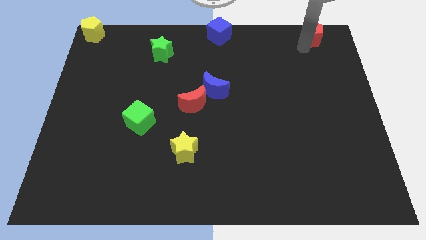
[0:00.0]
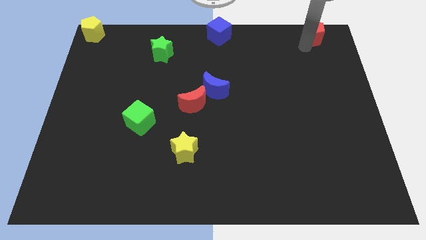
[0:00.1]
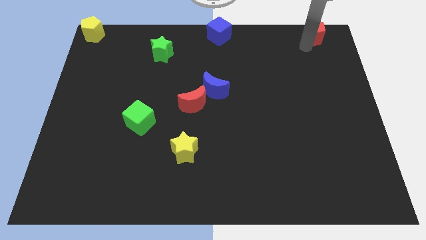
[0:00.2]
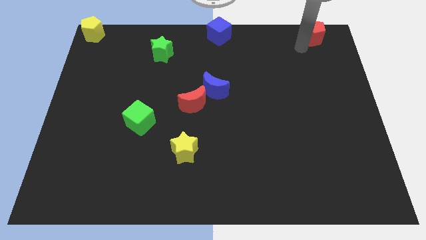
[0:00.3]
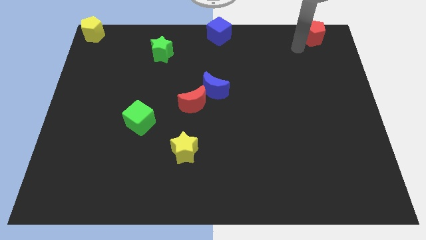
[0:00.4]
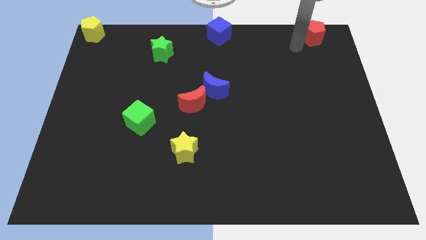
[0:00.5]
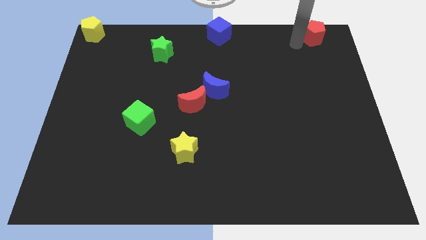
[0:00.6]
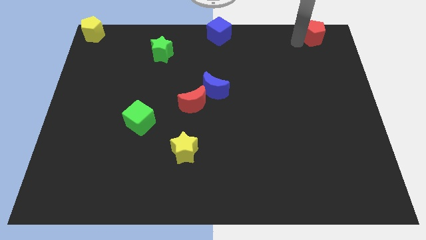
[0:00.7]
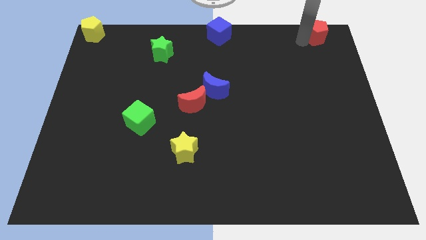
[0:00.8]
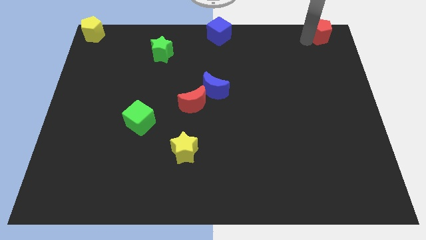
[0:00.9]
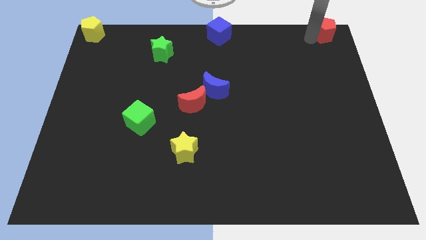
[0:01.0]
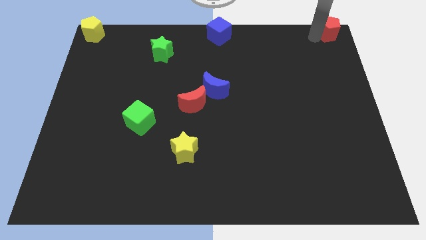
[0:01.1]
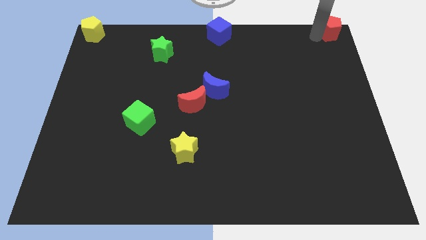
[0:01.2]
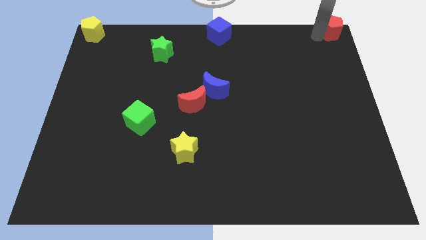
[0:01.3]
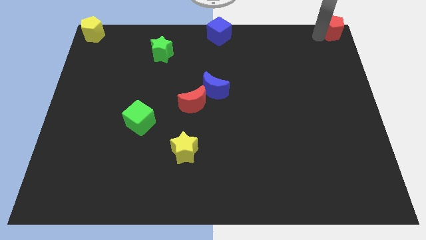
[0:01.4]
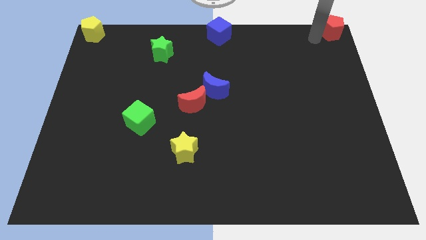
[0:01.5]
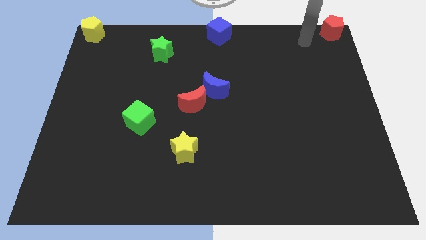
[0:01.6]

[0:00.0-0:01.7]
place the red pentagon to the right top corner

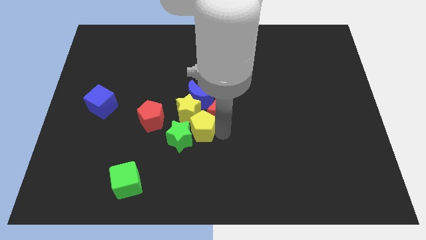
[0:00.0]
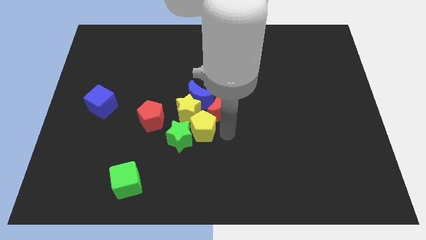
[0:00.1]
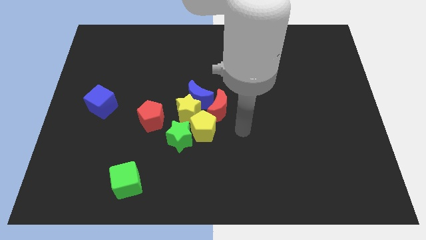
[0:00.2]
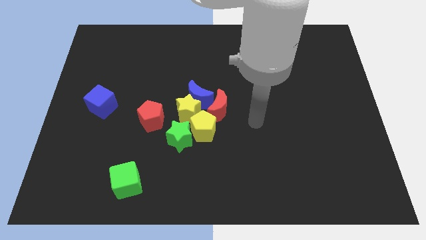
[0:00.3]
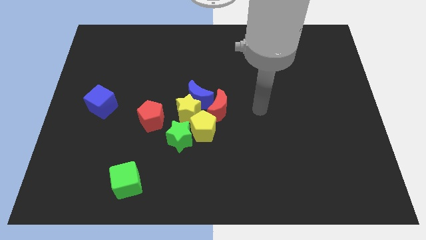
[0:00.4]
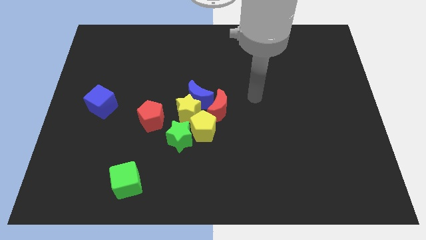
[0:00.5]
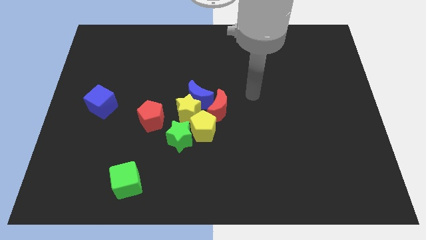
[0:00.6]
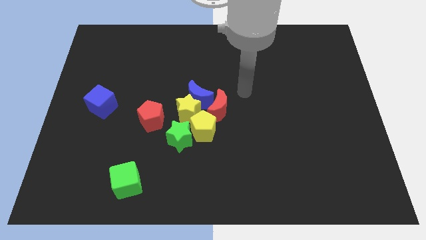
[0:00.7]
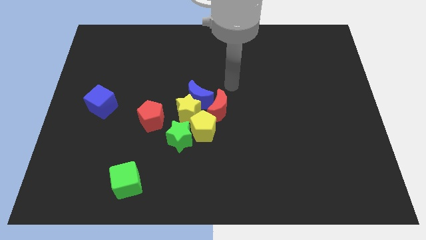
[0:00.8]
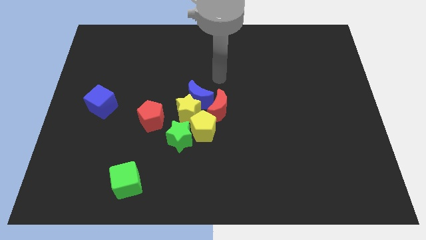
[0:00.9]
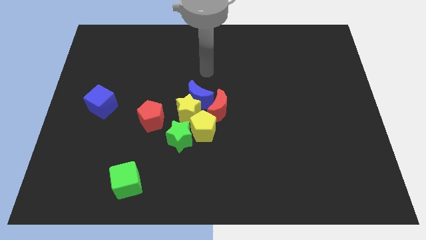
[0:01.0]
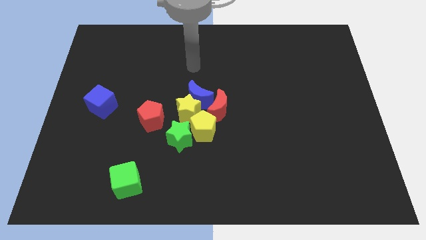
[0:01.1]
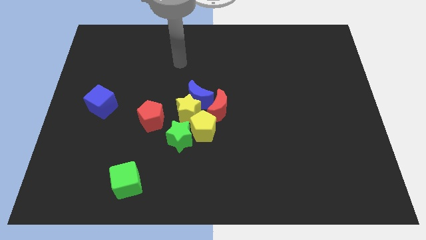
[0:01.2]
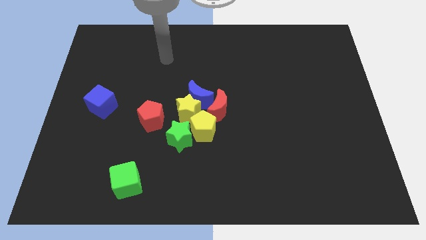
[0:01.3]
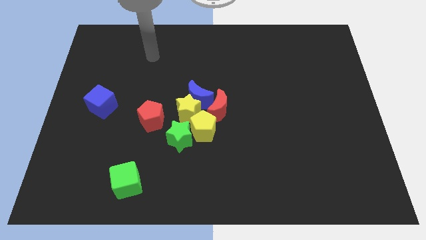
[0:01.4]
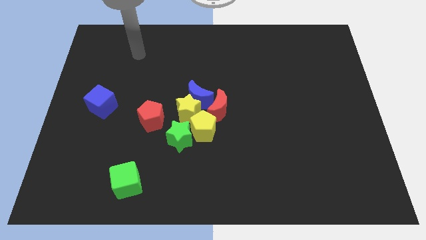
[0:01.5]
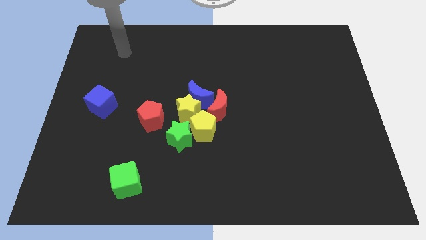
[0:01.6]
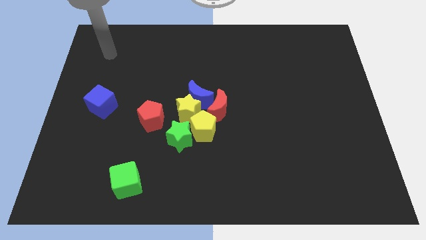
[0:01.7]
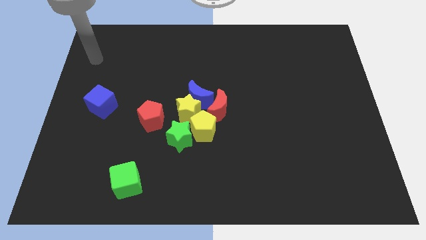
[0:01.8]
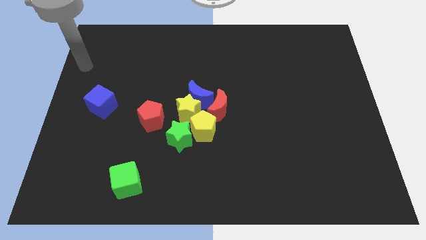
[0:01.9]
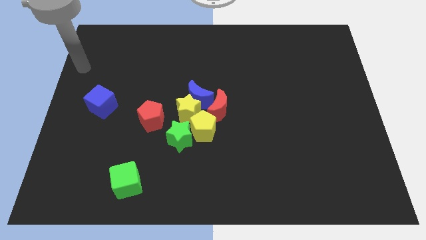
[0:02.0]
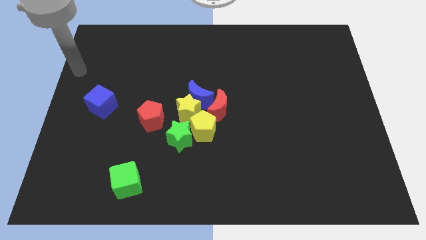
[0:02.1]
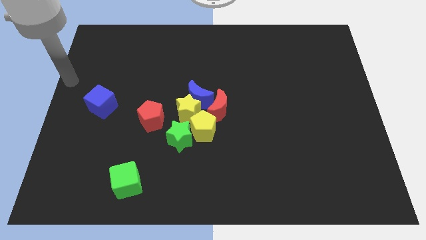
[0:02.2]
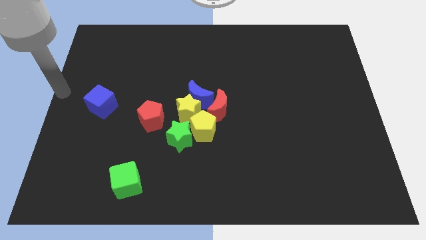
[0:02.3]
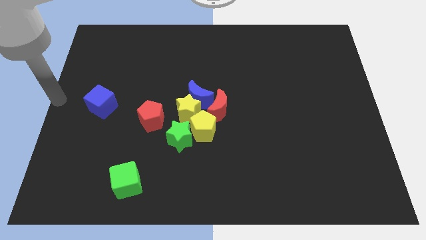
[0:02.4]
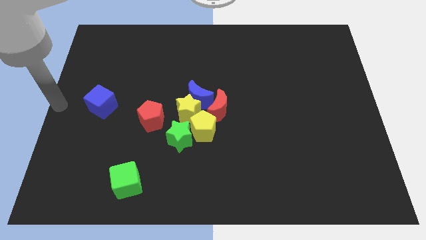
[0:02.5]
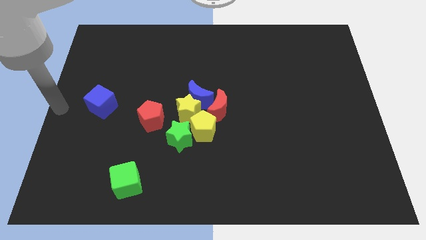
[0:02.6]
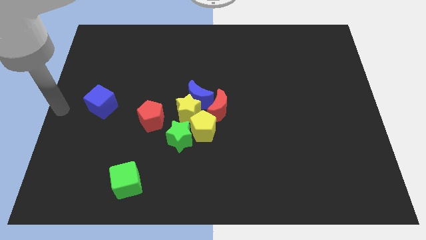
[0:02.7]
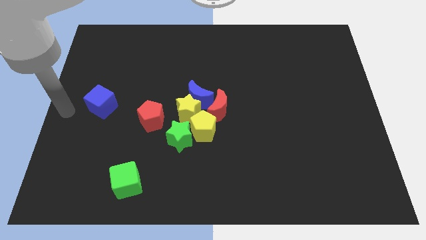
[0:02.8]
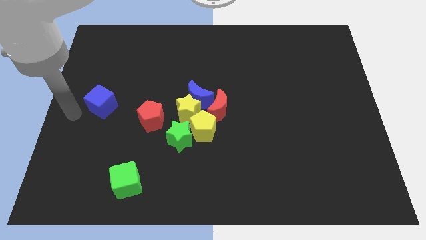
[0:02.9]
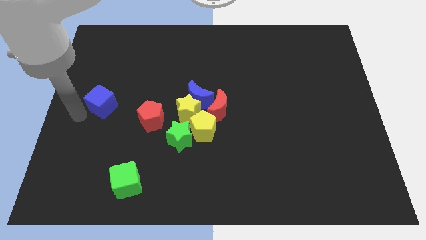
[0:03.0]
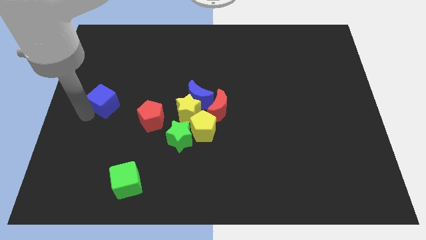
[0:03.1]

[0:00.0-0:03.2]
point your arm at the left of the blue cube

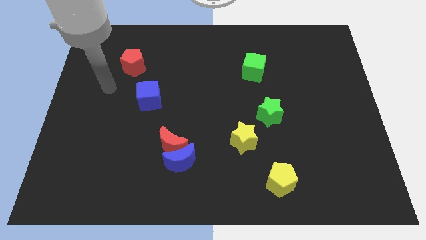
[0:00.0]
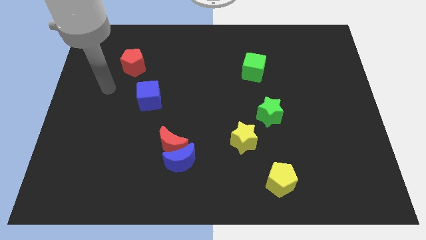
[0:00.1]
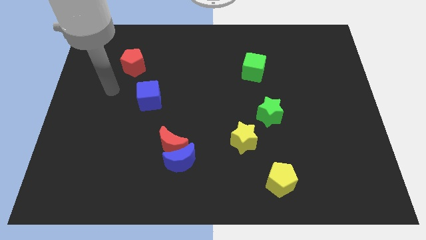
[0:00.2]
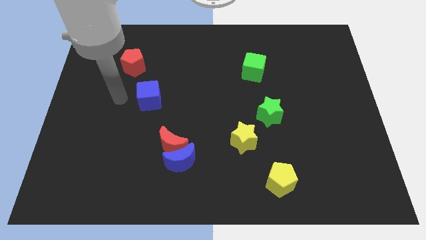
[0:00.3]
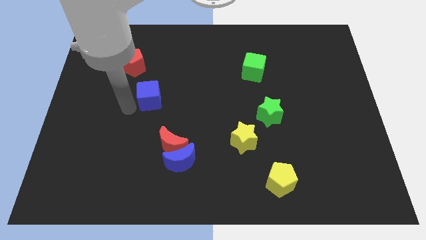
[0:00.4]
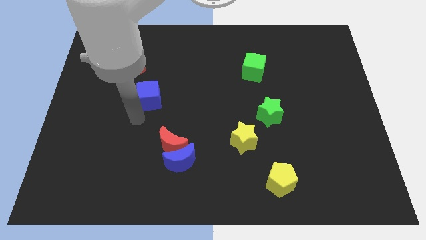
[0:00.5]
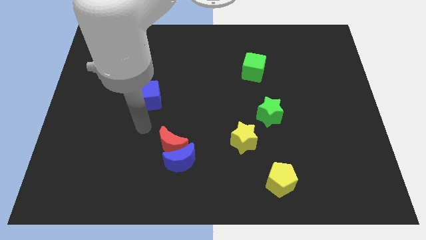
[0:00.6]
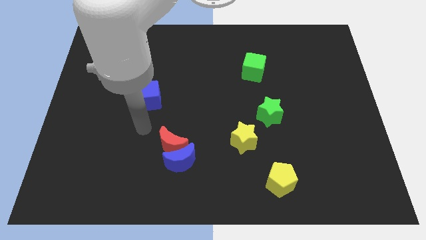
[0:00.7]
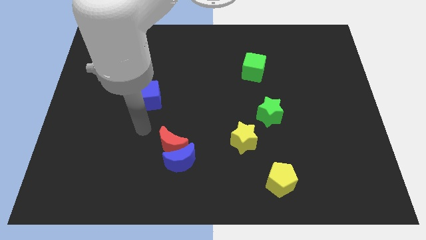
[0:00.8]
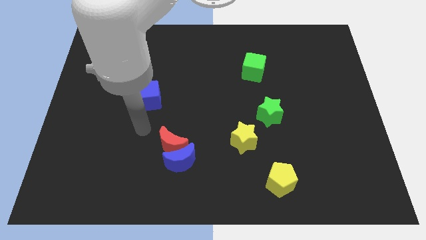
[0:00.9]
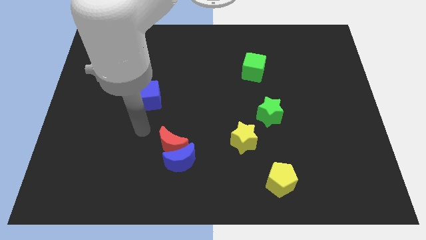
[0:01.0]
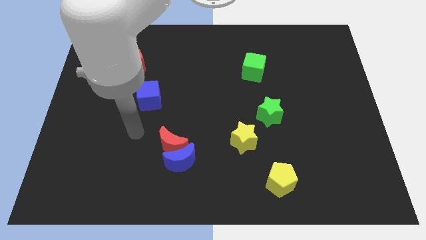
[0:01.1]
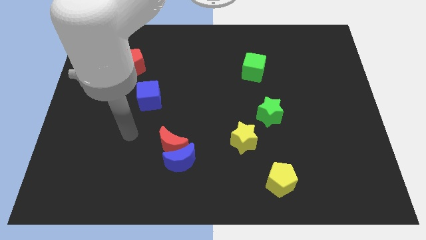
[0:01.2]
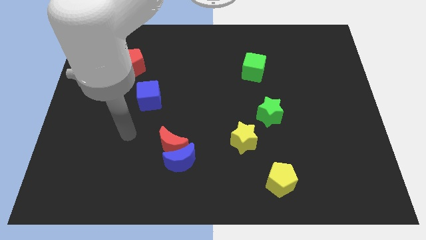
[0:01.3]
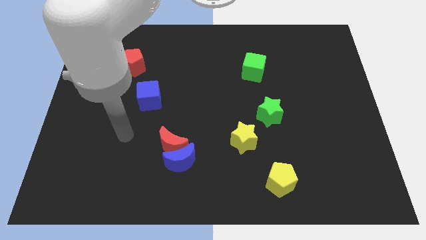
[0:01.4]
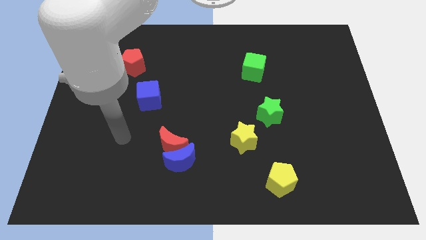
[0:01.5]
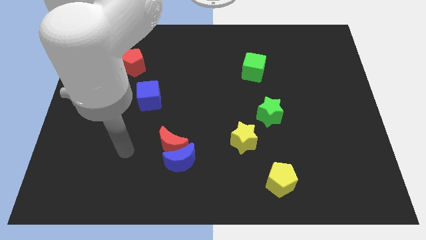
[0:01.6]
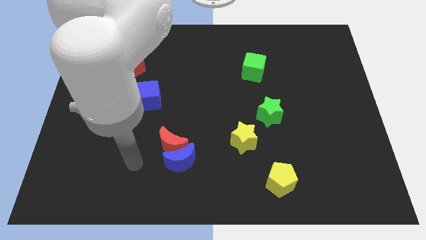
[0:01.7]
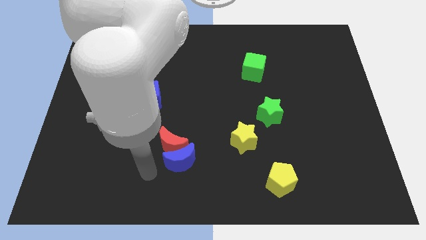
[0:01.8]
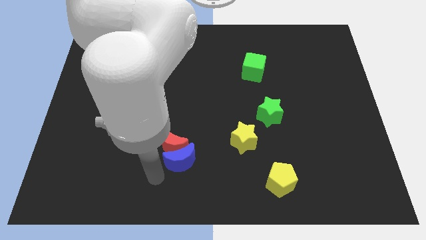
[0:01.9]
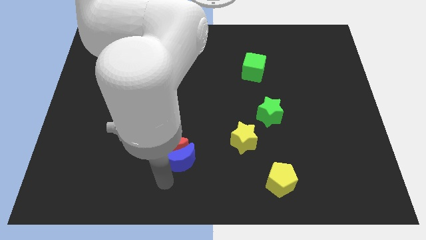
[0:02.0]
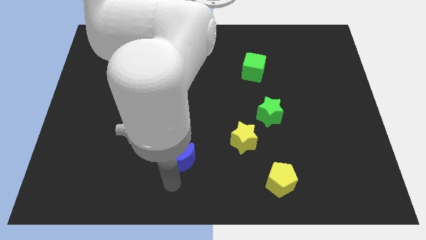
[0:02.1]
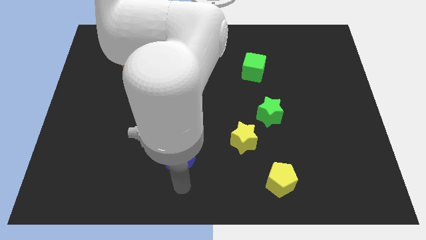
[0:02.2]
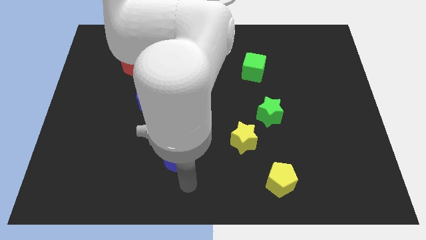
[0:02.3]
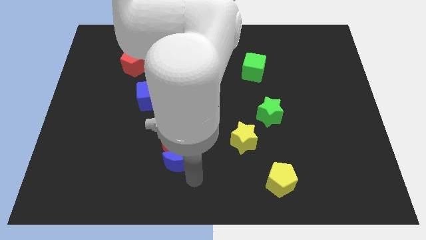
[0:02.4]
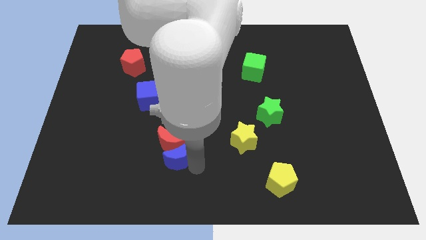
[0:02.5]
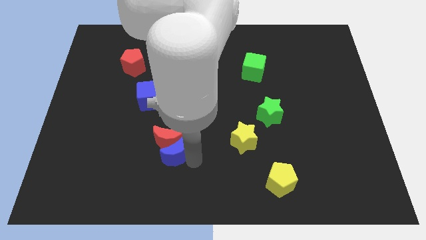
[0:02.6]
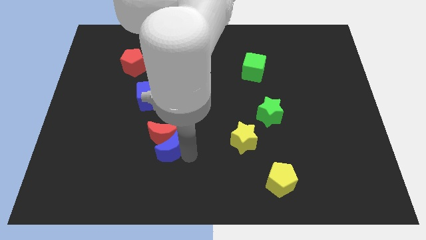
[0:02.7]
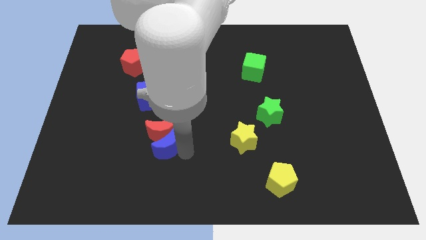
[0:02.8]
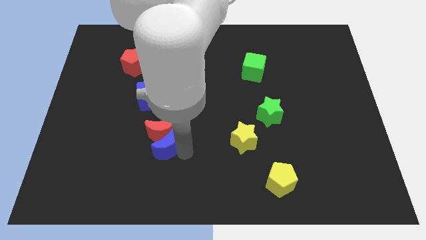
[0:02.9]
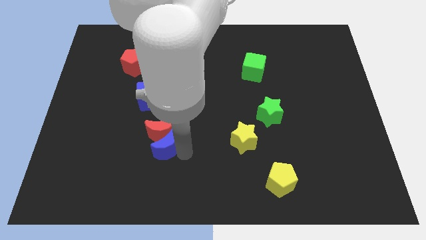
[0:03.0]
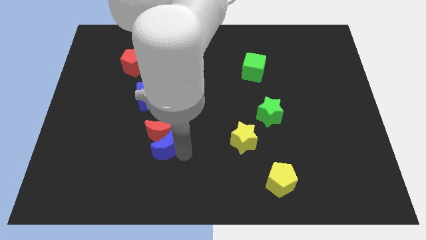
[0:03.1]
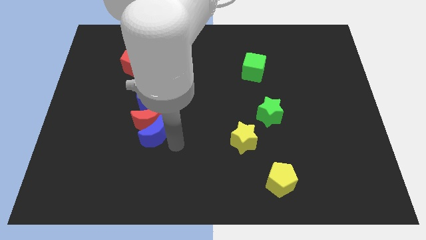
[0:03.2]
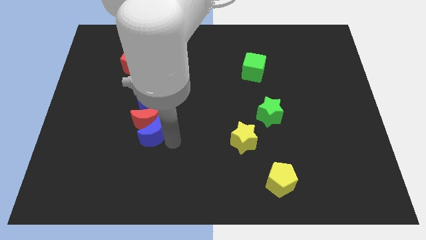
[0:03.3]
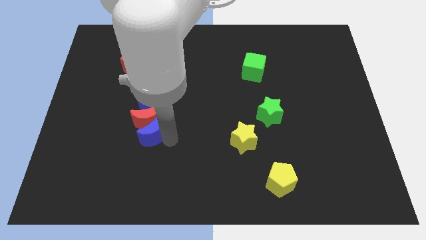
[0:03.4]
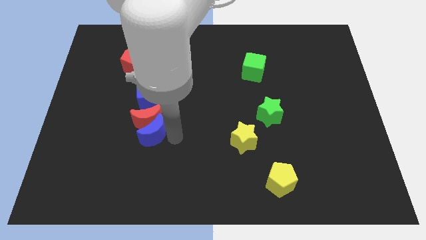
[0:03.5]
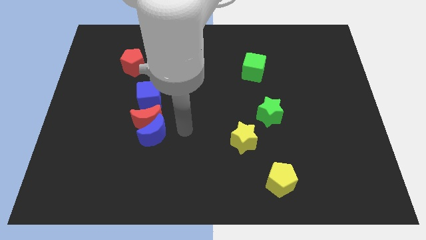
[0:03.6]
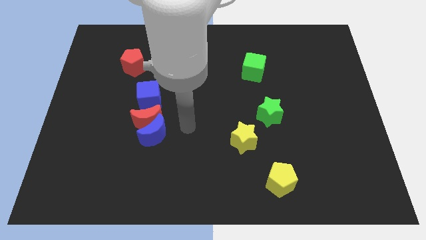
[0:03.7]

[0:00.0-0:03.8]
place the red and blue crescents below the blue cube

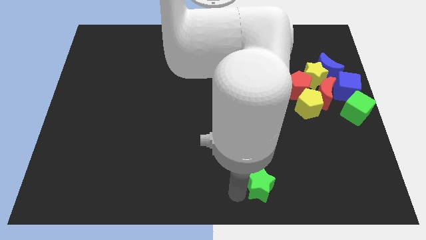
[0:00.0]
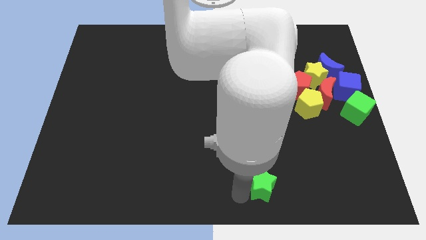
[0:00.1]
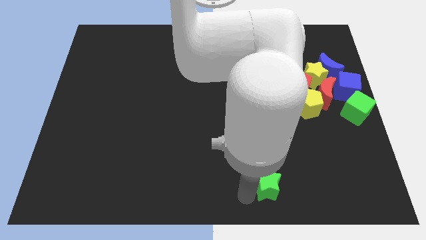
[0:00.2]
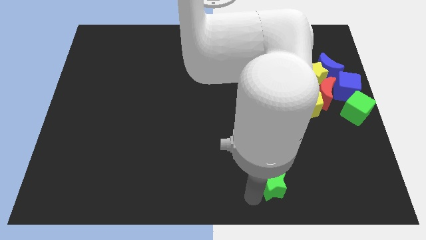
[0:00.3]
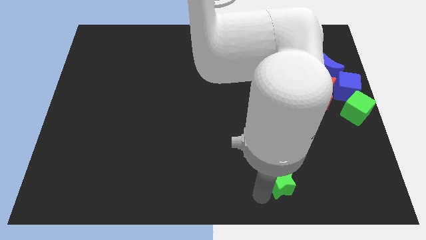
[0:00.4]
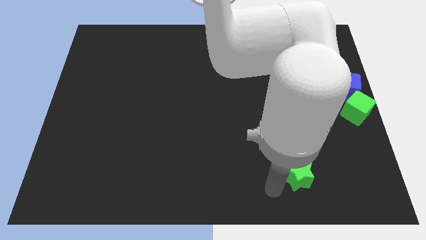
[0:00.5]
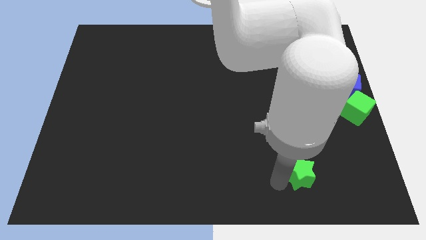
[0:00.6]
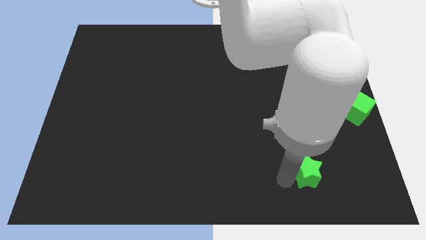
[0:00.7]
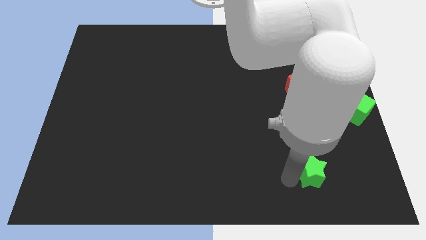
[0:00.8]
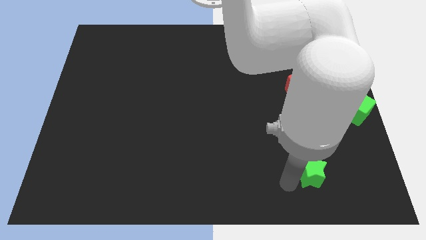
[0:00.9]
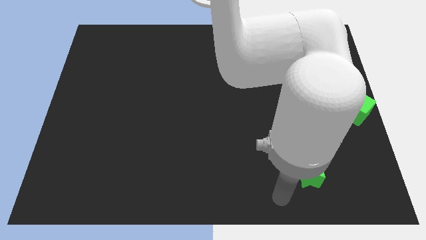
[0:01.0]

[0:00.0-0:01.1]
push green star below yellow pentagon
